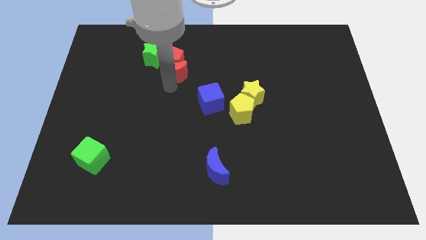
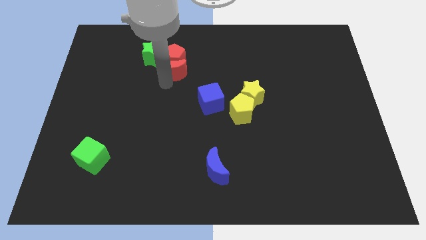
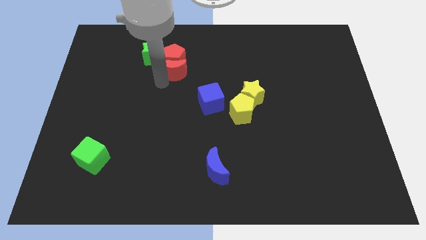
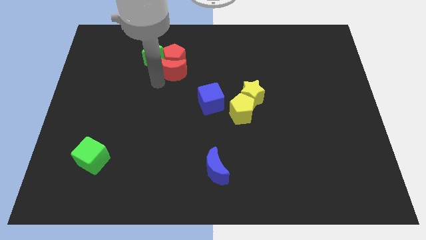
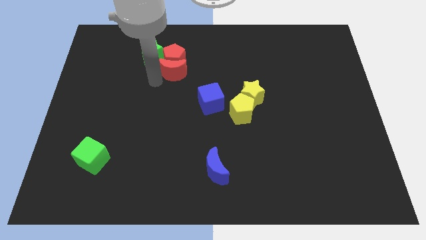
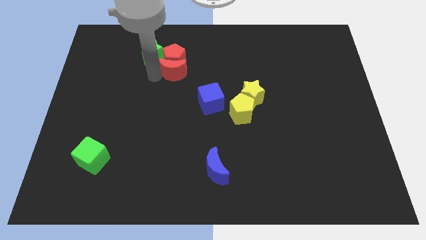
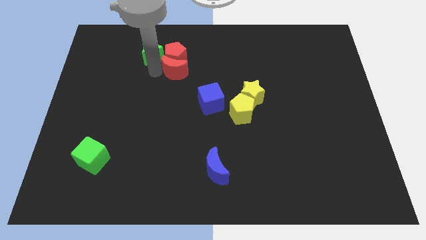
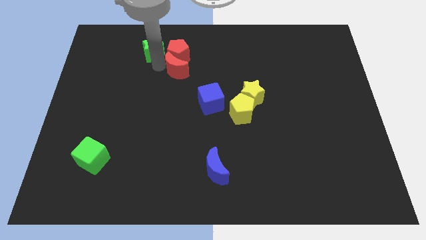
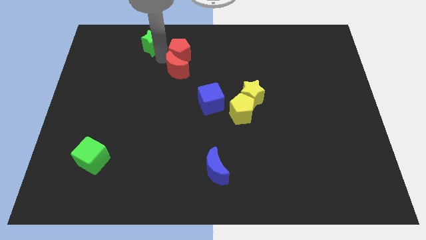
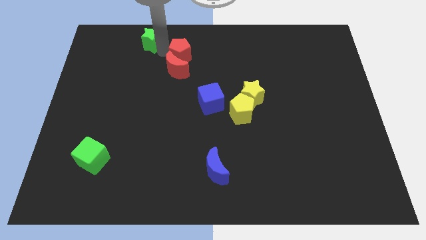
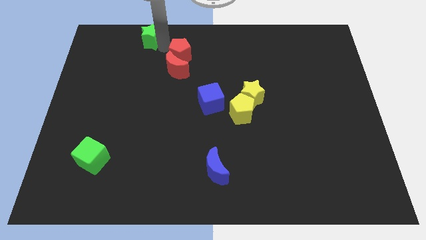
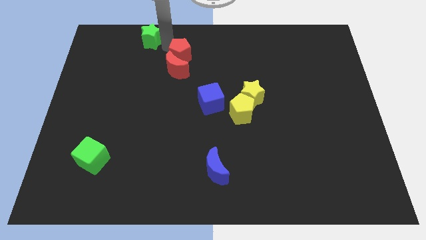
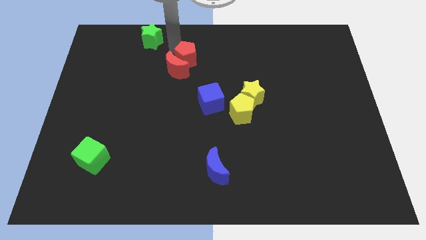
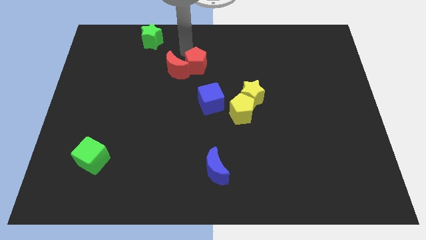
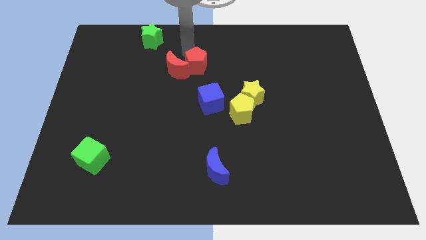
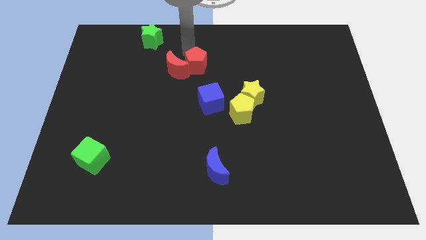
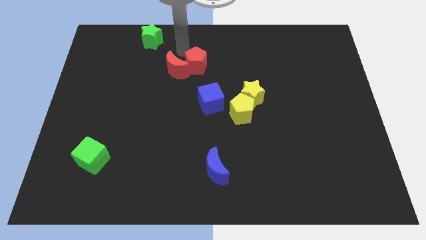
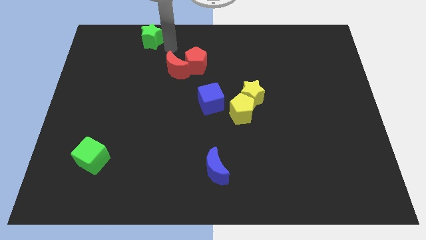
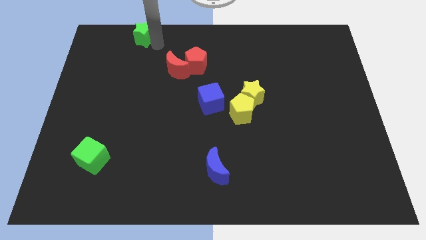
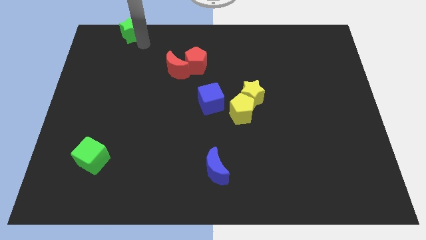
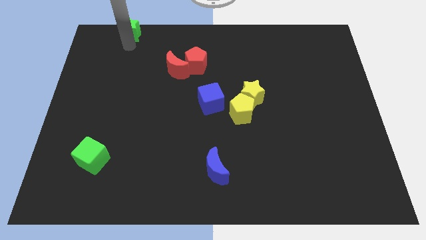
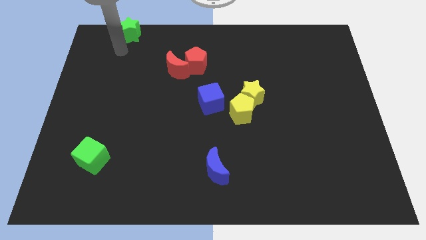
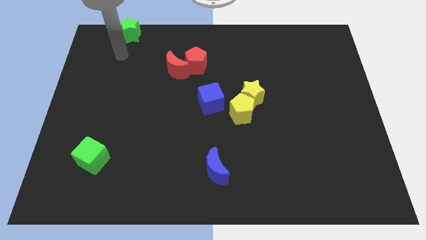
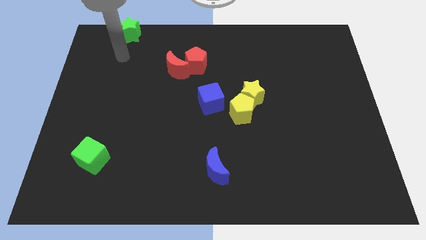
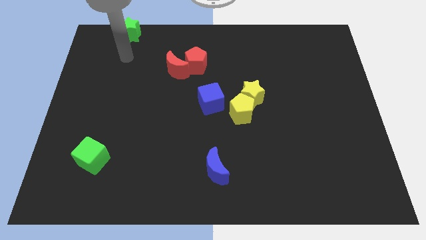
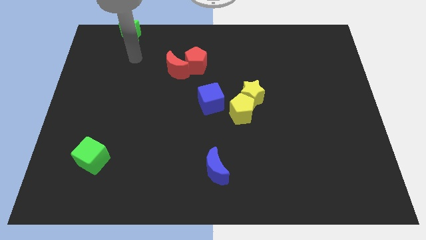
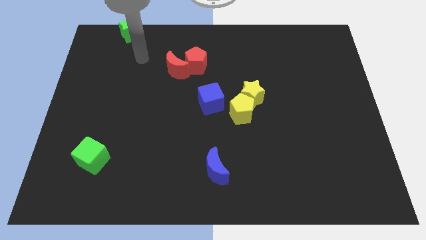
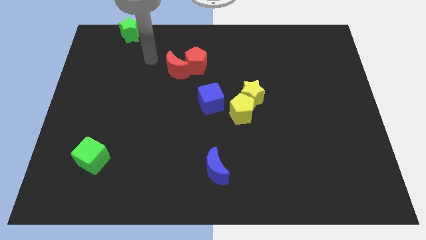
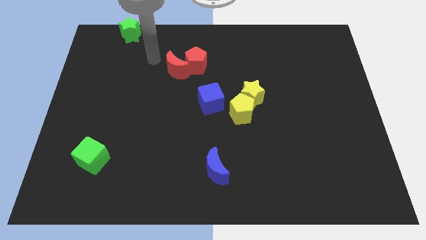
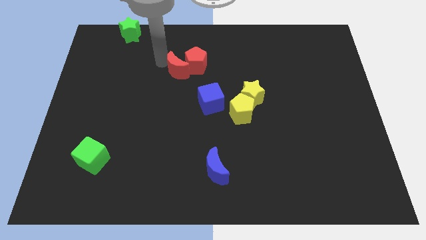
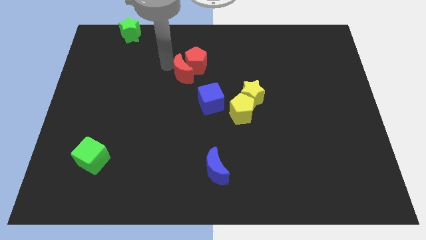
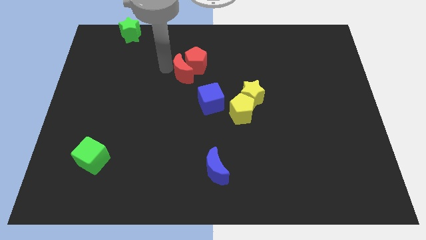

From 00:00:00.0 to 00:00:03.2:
separate green star from the red pentagon

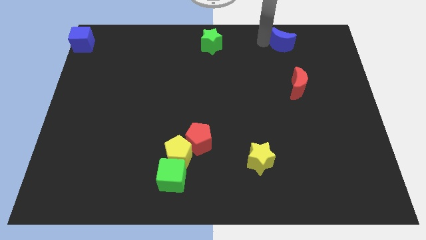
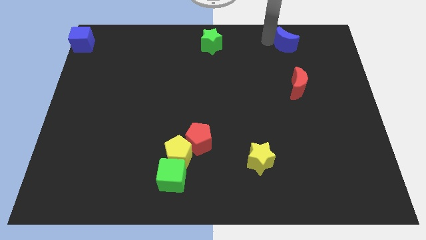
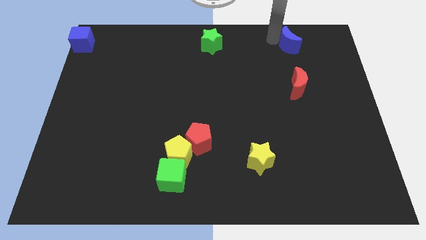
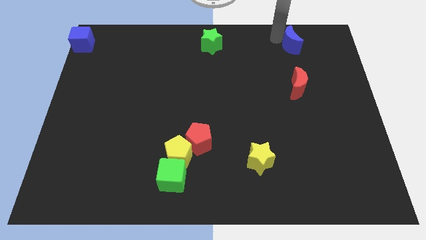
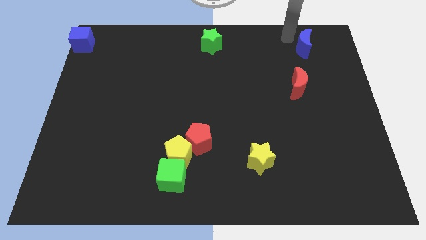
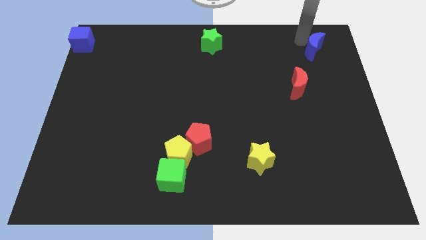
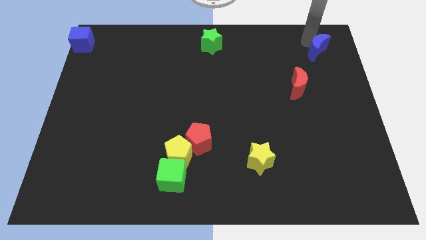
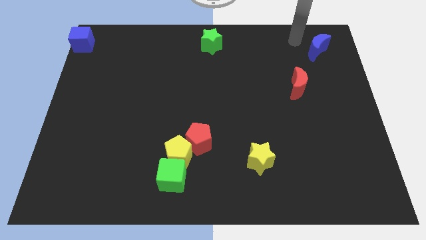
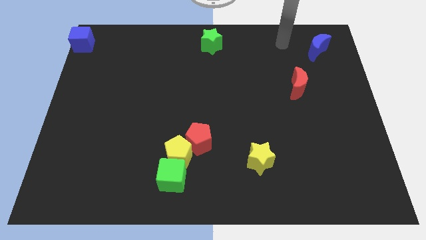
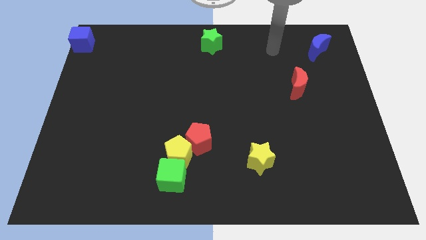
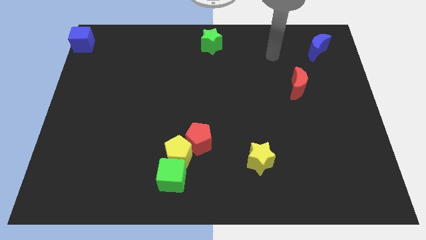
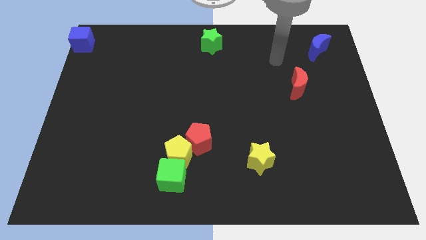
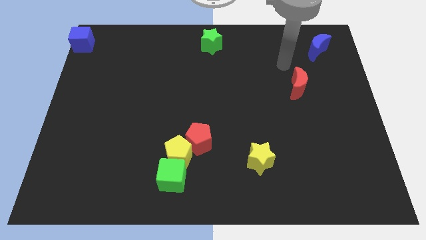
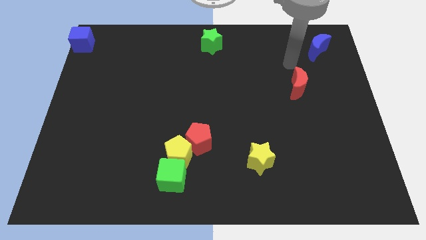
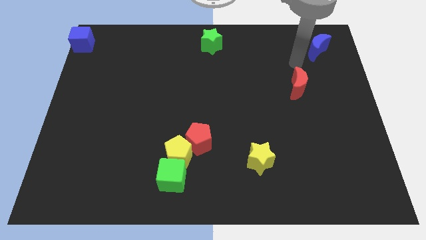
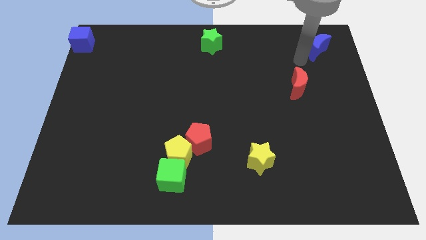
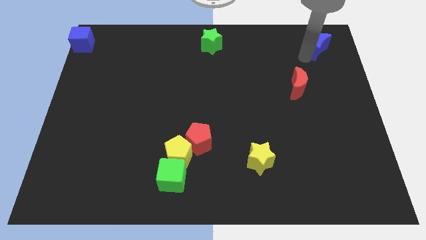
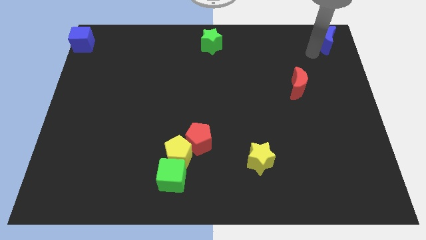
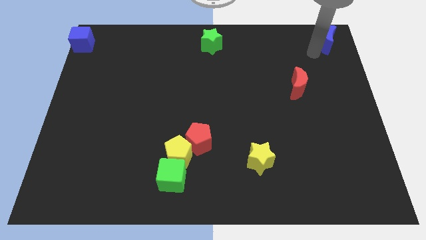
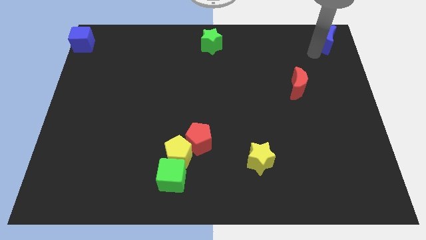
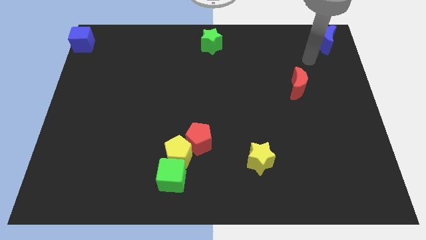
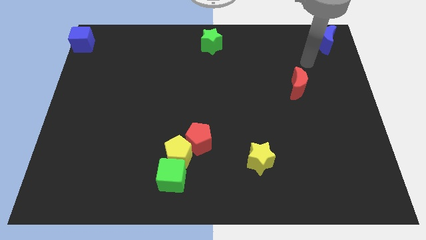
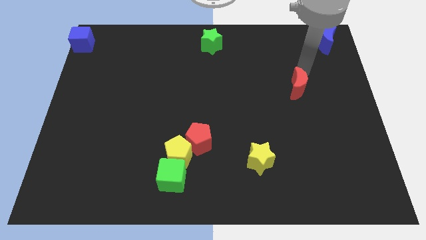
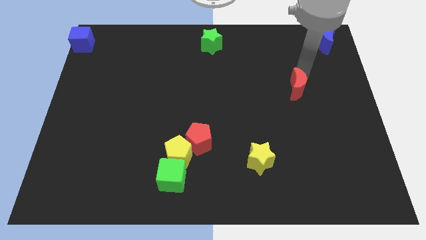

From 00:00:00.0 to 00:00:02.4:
place the blue moon at the top right corner of the board

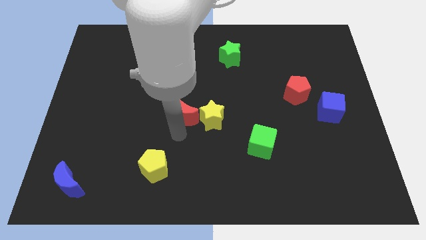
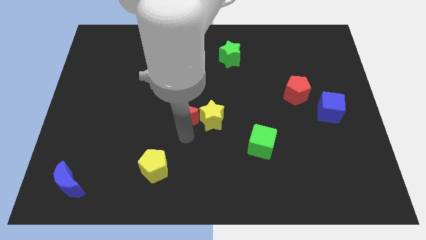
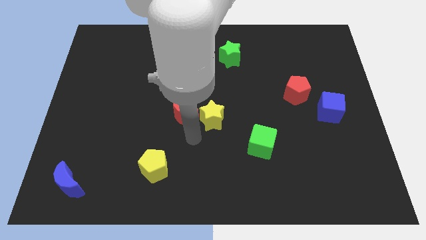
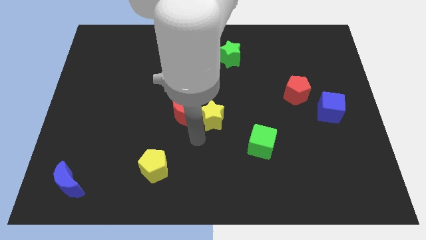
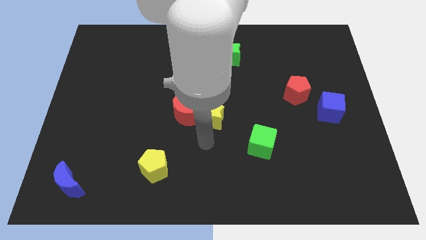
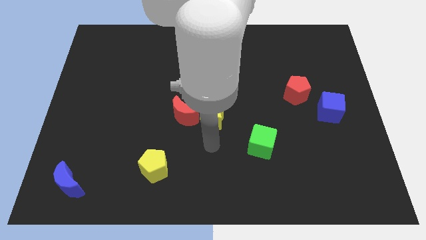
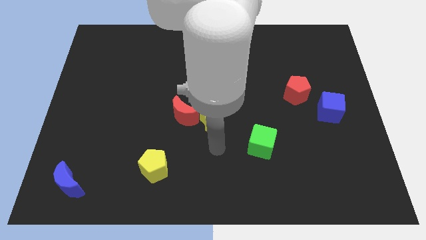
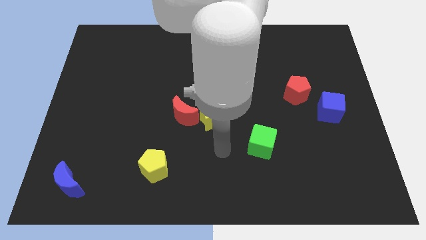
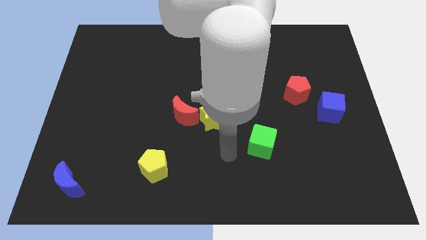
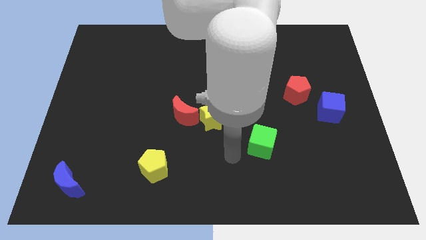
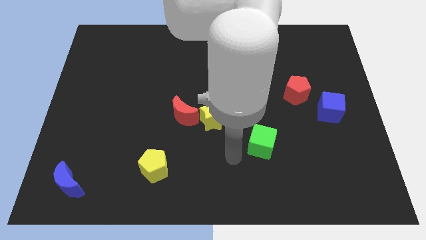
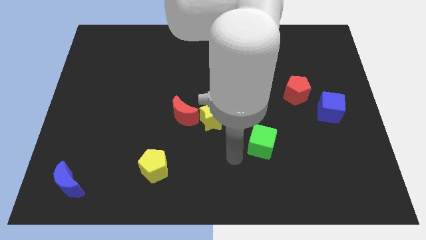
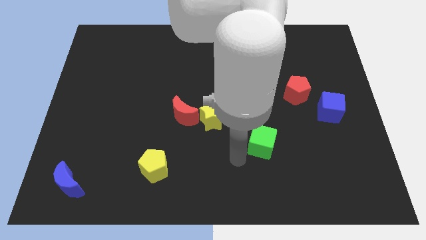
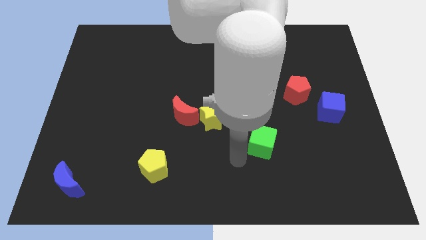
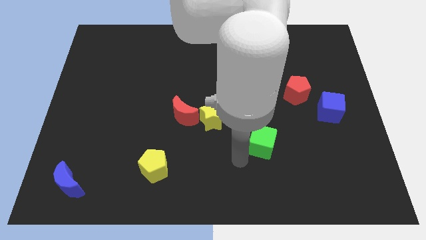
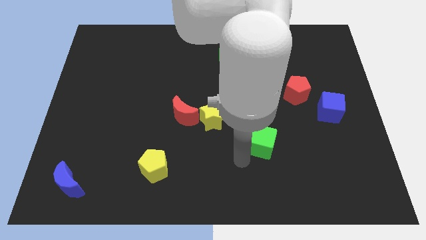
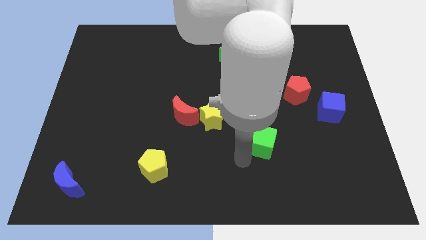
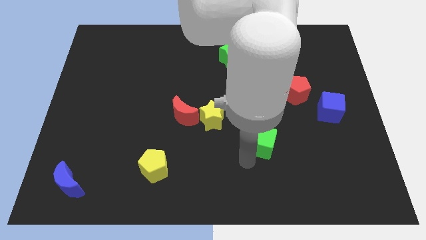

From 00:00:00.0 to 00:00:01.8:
move your arm below the green cube

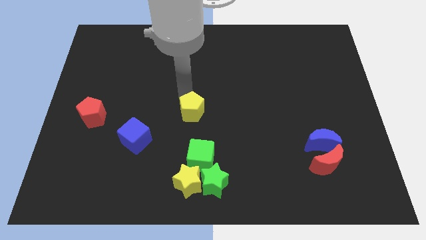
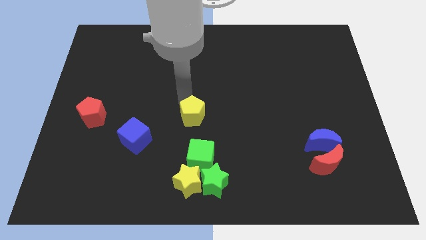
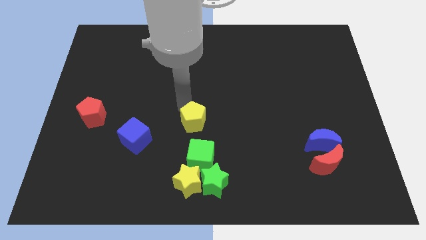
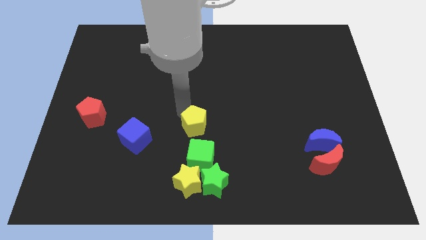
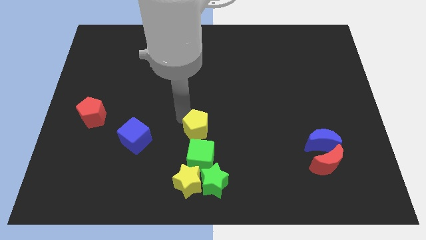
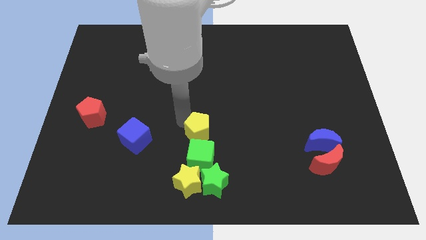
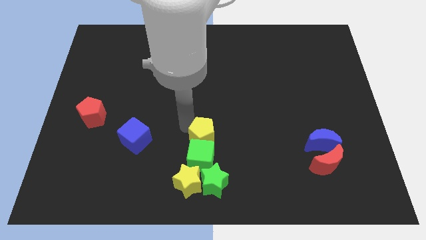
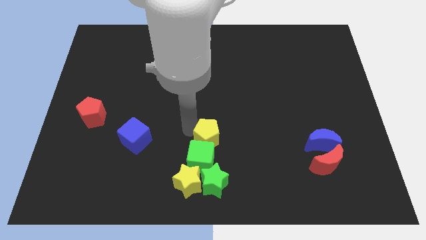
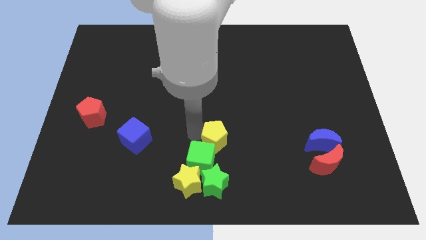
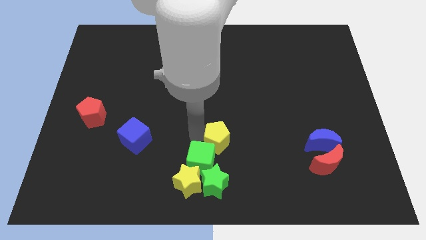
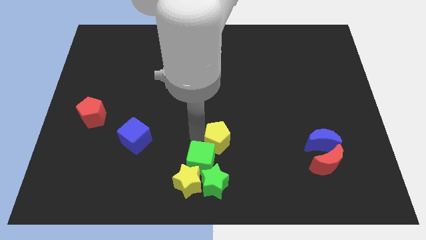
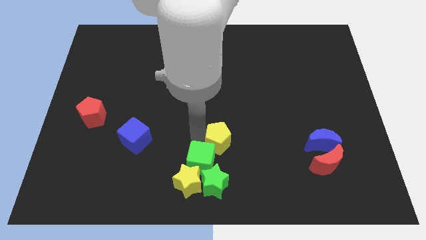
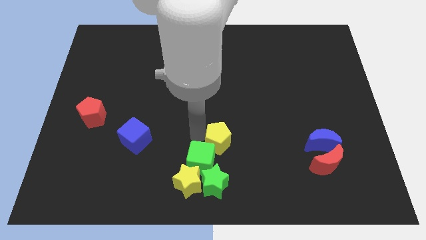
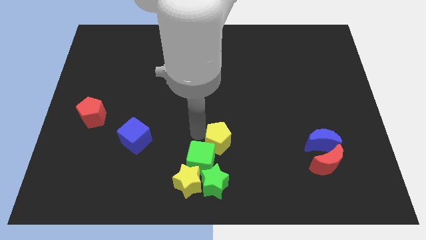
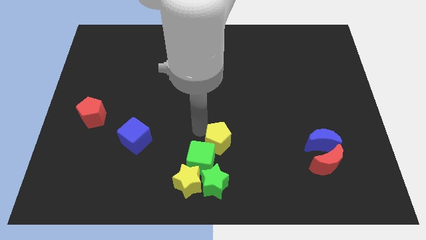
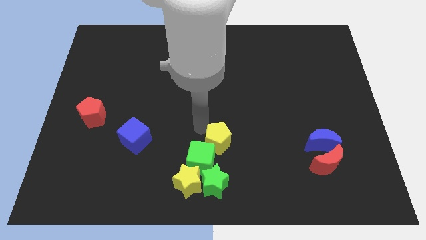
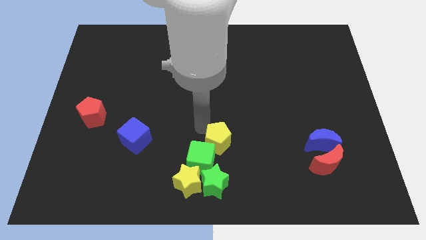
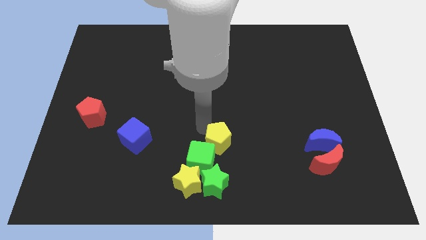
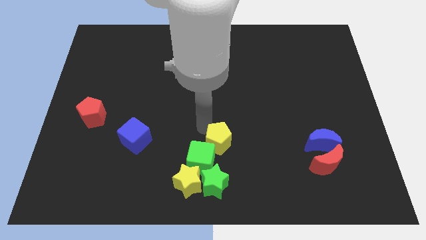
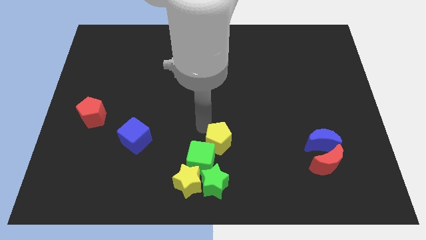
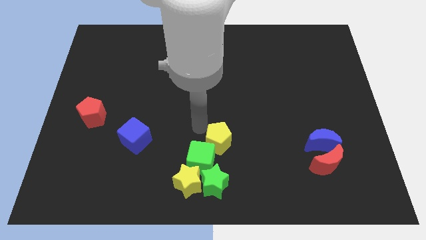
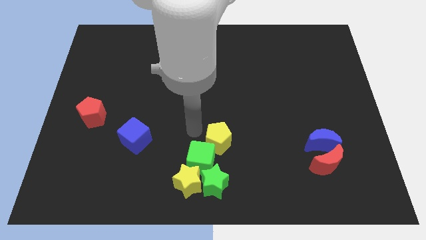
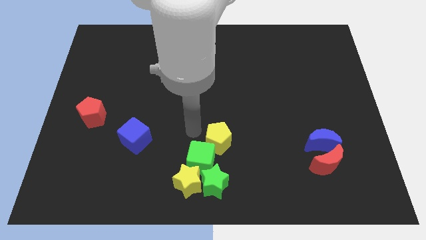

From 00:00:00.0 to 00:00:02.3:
push the yellow pentagon to the top right of the green cube
